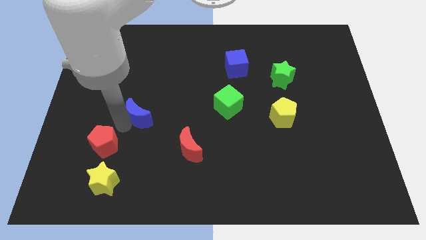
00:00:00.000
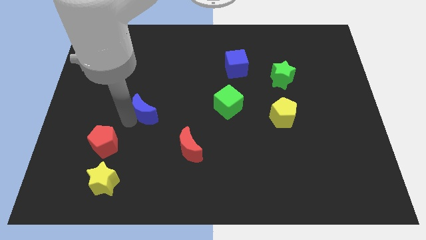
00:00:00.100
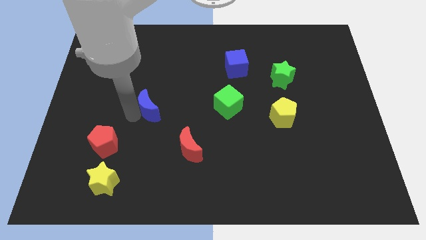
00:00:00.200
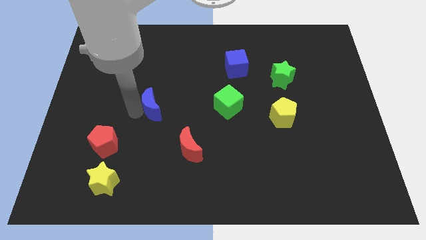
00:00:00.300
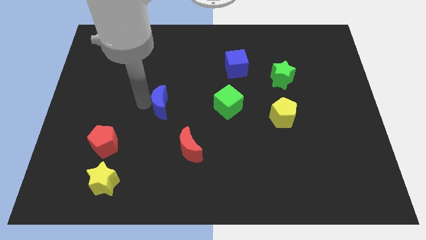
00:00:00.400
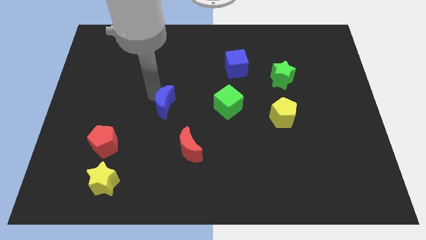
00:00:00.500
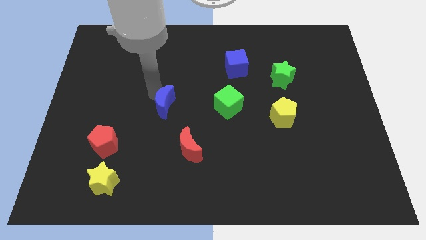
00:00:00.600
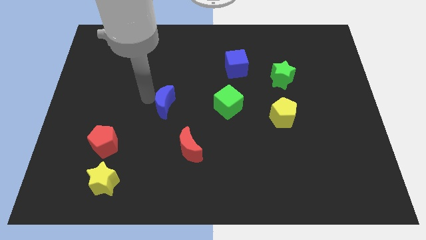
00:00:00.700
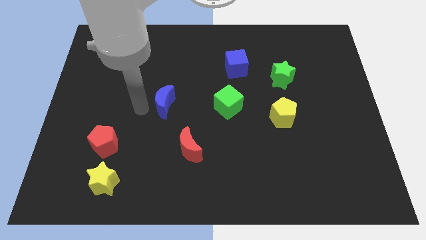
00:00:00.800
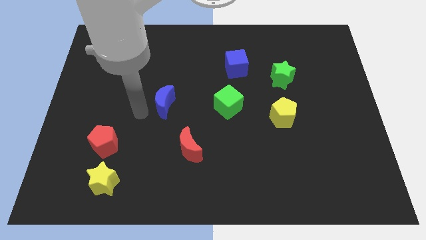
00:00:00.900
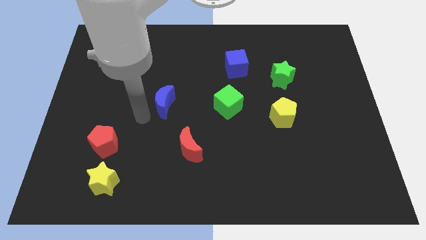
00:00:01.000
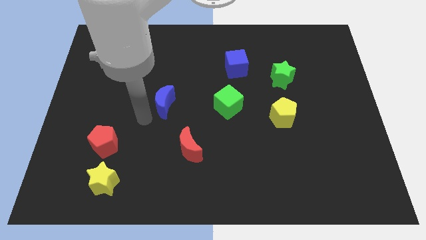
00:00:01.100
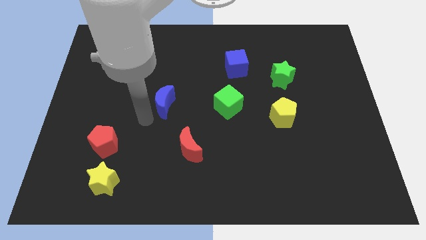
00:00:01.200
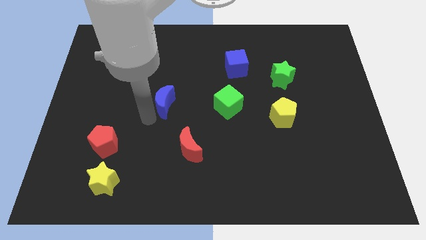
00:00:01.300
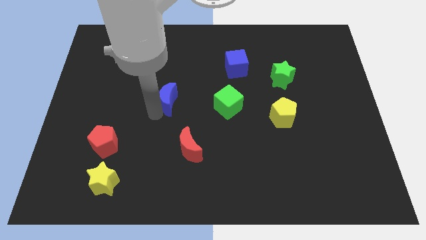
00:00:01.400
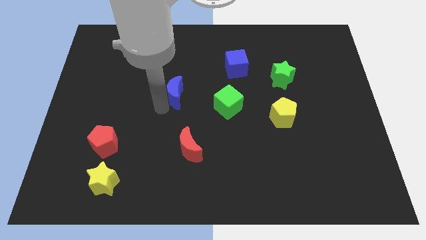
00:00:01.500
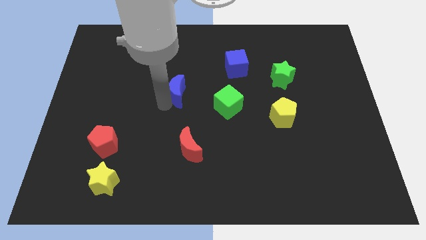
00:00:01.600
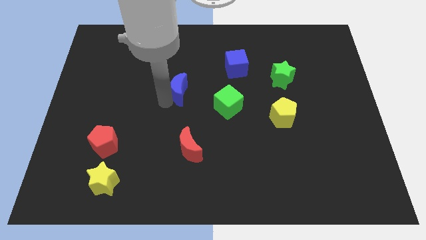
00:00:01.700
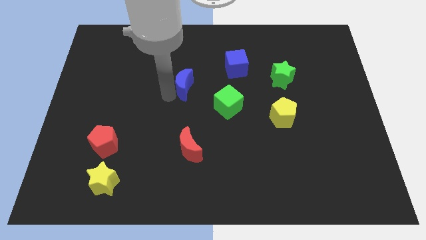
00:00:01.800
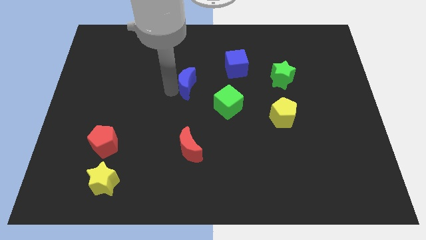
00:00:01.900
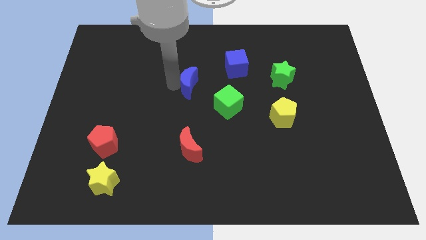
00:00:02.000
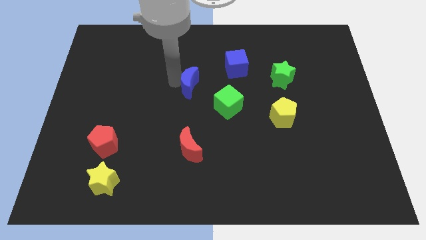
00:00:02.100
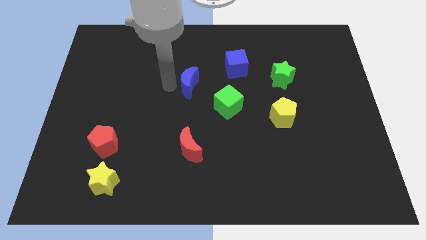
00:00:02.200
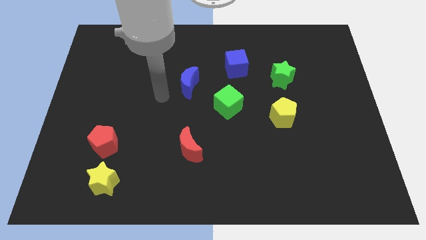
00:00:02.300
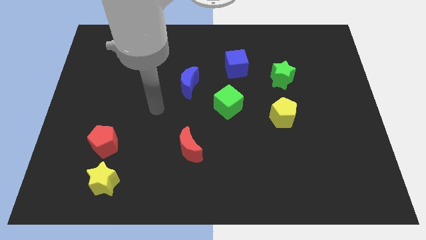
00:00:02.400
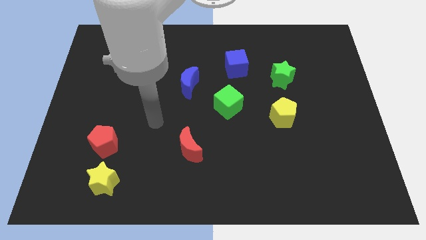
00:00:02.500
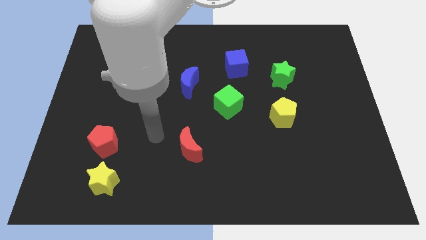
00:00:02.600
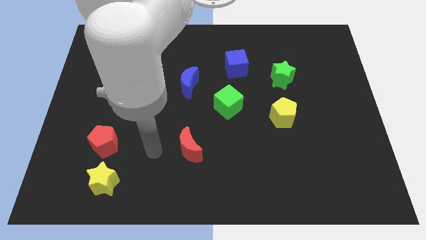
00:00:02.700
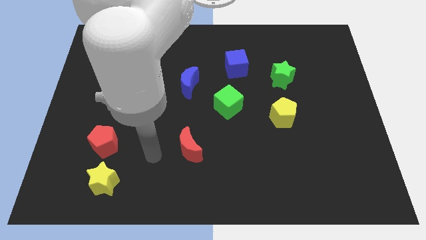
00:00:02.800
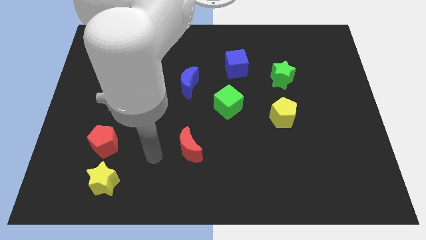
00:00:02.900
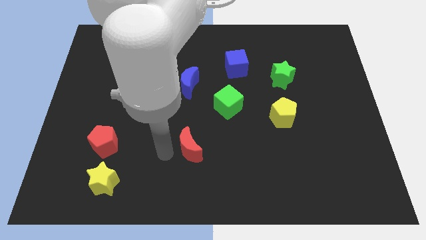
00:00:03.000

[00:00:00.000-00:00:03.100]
move the blue crescent to the left side of the blue cube

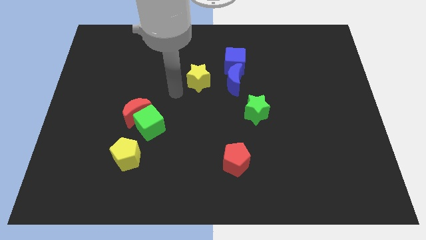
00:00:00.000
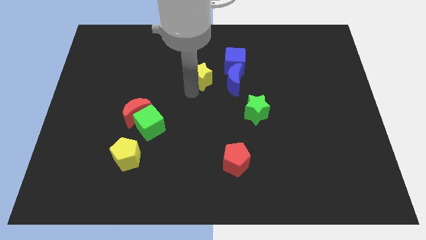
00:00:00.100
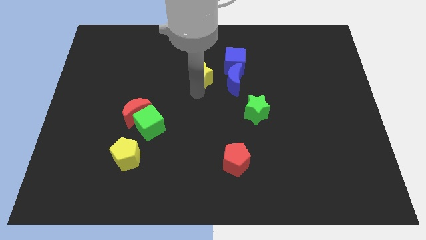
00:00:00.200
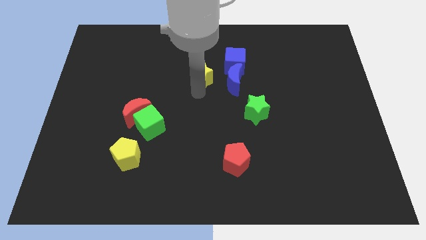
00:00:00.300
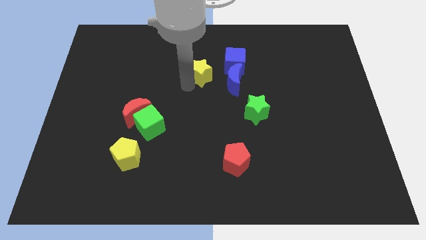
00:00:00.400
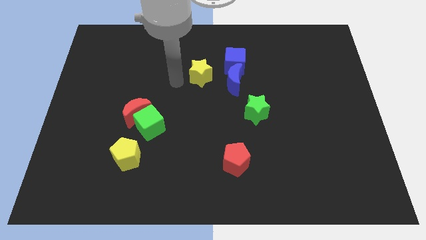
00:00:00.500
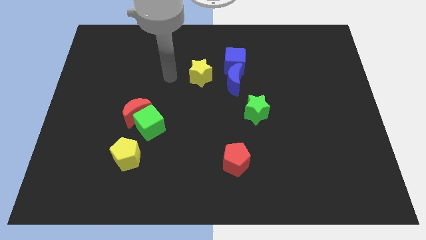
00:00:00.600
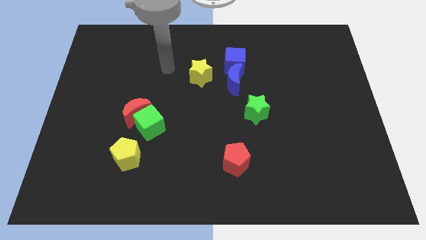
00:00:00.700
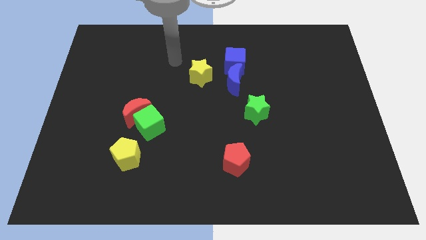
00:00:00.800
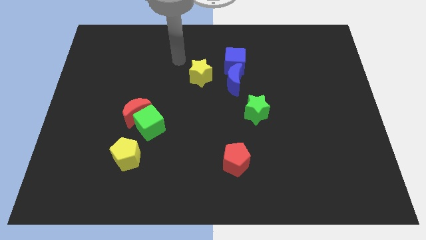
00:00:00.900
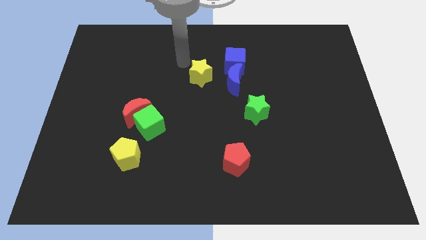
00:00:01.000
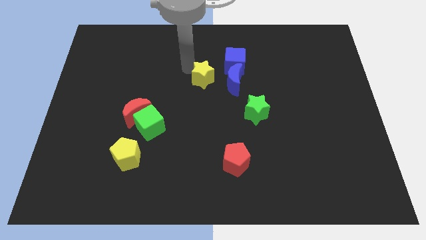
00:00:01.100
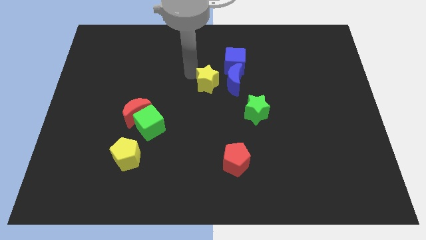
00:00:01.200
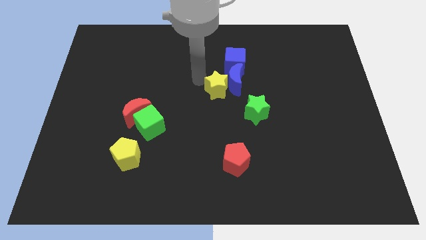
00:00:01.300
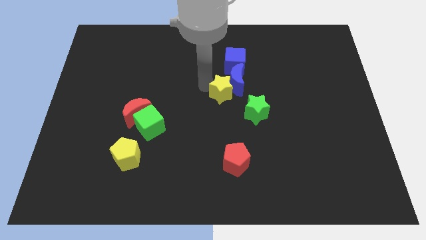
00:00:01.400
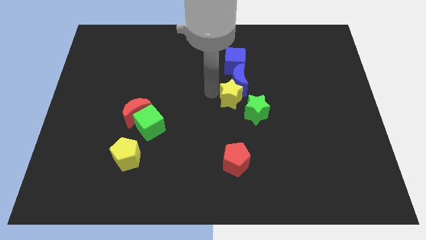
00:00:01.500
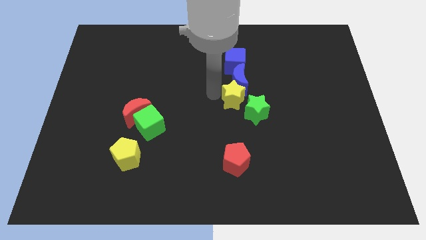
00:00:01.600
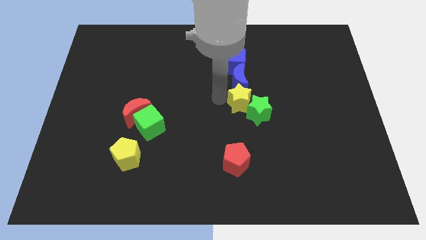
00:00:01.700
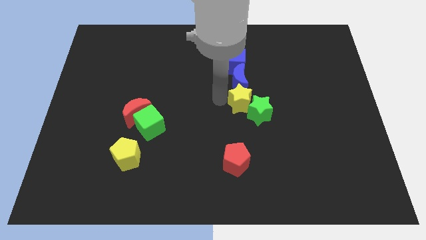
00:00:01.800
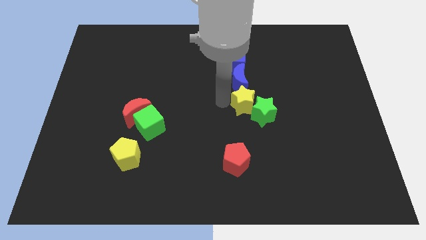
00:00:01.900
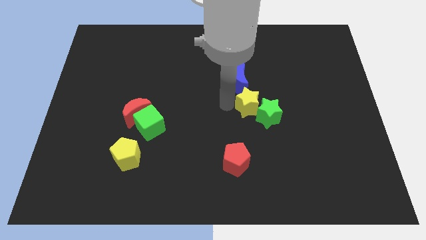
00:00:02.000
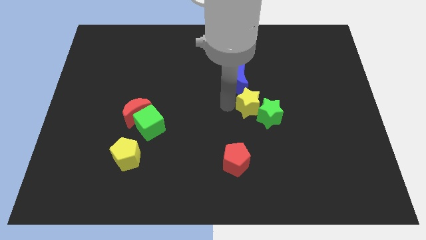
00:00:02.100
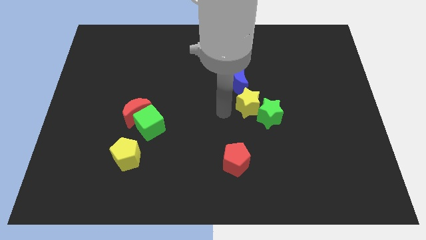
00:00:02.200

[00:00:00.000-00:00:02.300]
push the yellow star into the green star

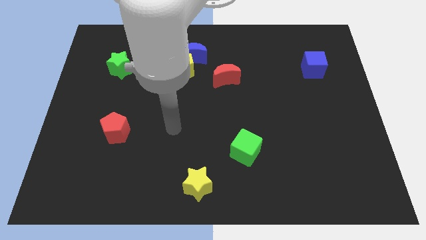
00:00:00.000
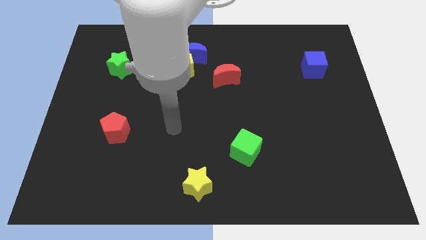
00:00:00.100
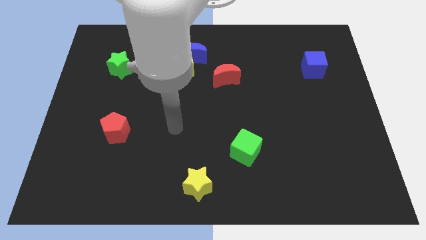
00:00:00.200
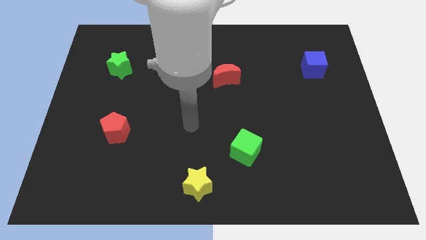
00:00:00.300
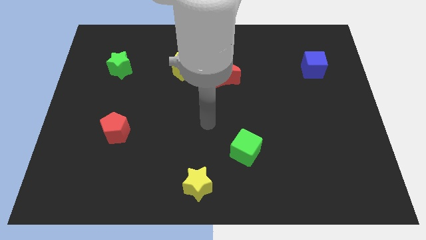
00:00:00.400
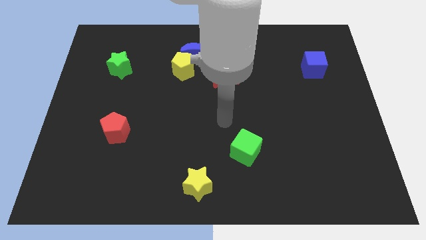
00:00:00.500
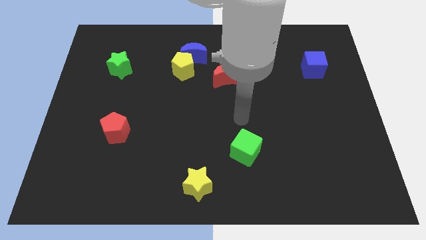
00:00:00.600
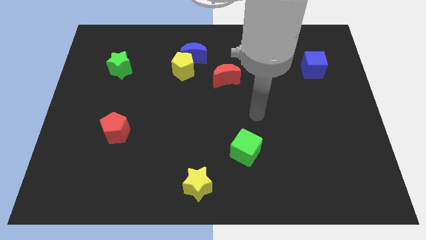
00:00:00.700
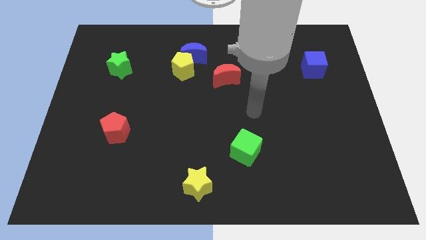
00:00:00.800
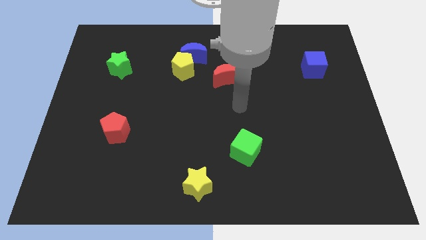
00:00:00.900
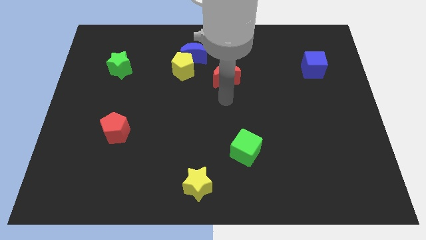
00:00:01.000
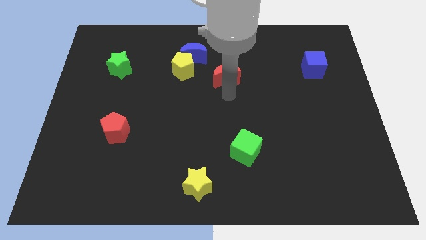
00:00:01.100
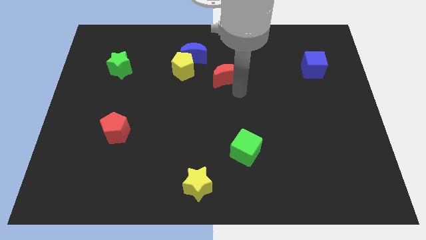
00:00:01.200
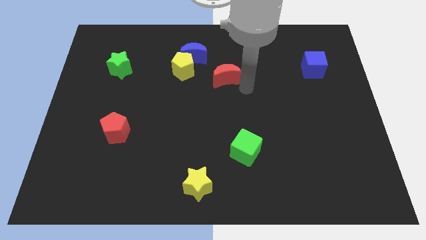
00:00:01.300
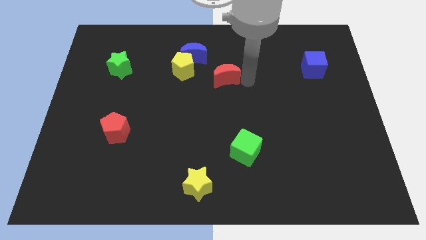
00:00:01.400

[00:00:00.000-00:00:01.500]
slightly touch the right side of the red crescent

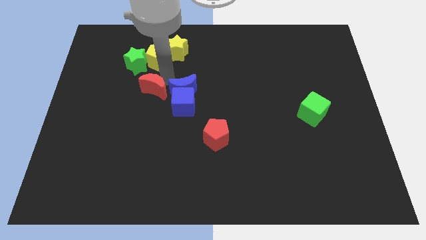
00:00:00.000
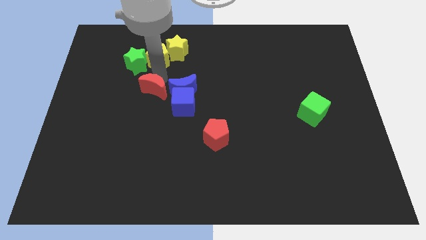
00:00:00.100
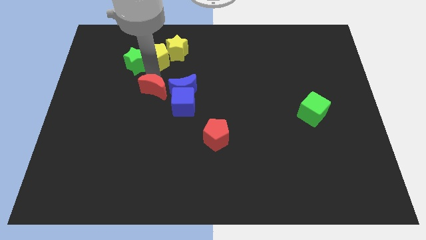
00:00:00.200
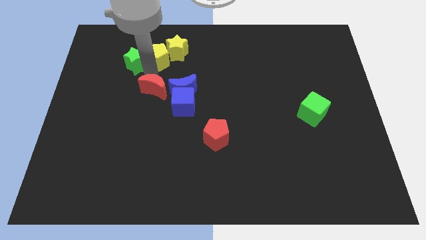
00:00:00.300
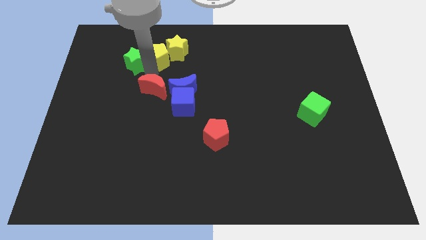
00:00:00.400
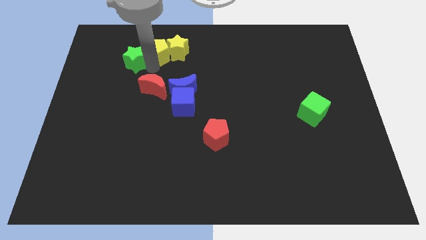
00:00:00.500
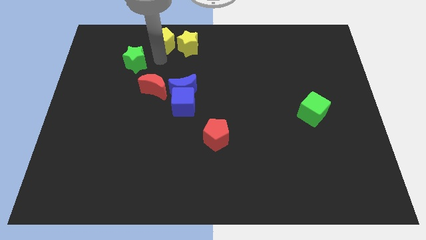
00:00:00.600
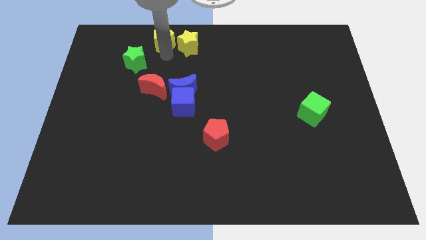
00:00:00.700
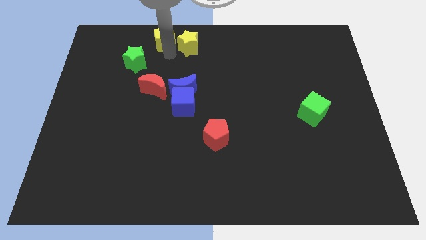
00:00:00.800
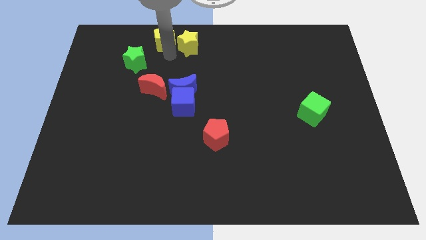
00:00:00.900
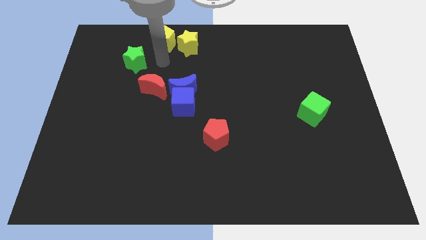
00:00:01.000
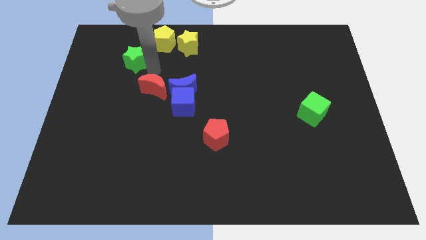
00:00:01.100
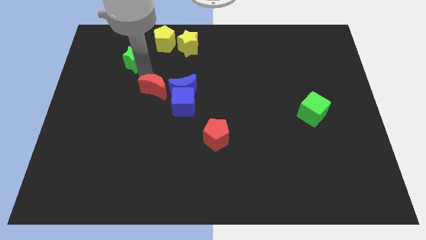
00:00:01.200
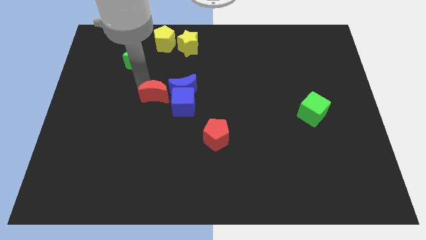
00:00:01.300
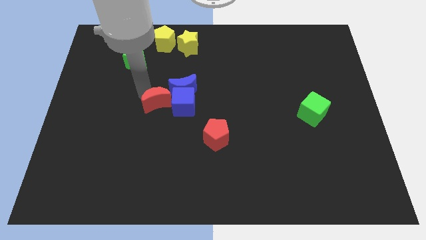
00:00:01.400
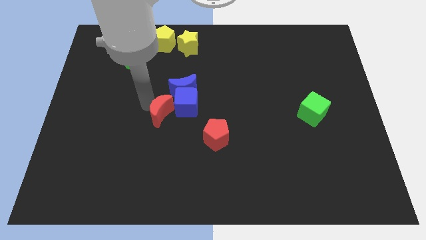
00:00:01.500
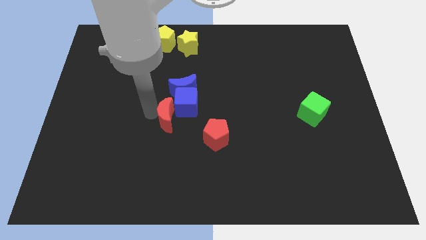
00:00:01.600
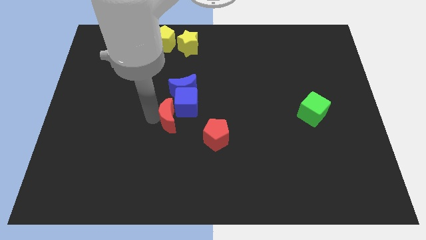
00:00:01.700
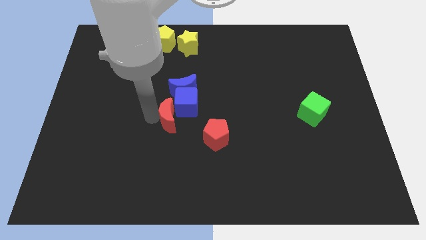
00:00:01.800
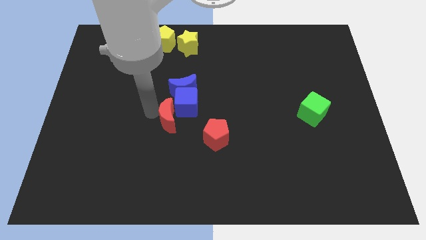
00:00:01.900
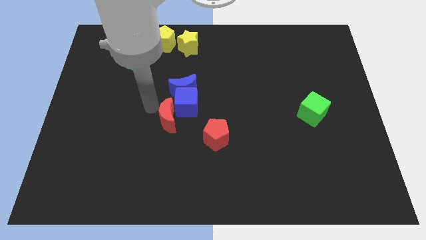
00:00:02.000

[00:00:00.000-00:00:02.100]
move red moon left beside the blue moon

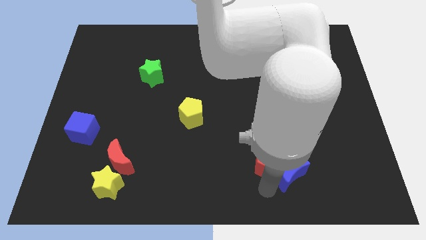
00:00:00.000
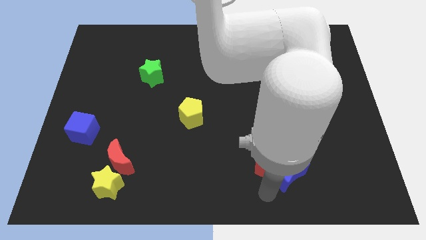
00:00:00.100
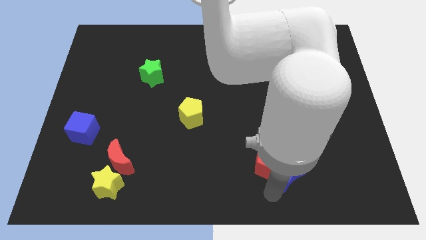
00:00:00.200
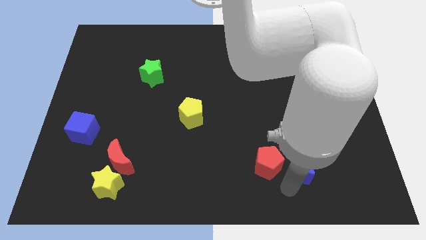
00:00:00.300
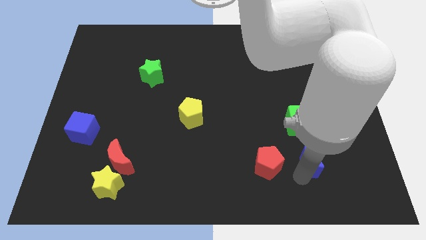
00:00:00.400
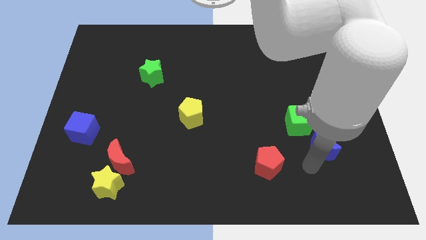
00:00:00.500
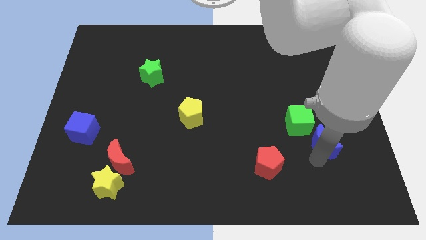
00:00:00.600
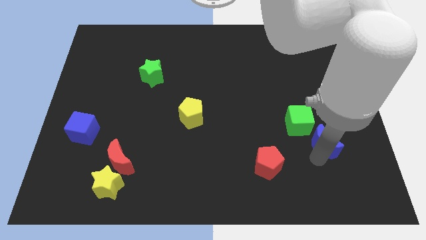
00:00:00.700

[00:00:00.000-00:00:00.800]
move the blue crescent away from red pentagon
